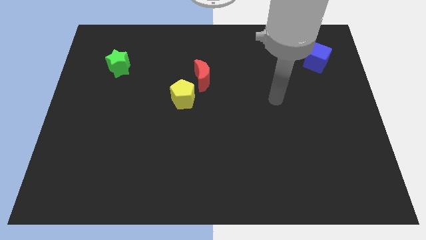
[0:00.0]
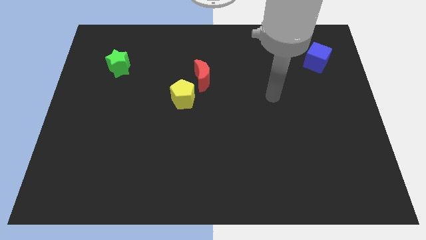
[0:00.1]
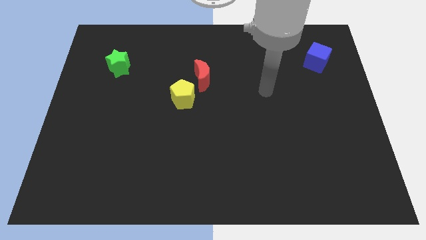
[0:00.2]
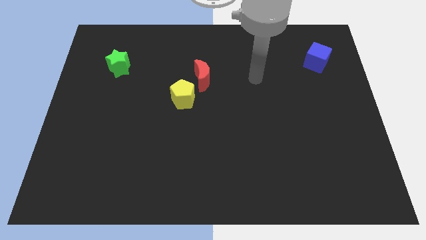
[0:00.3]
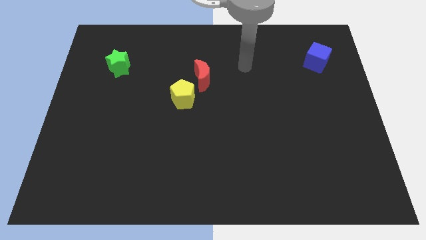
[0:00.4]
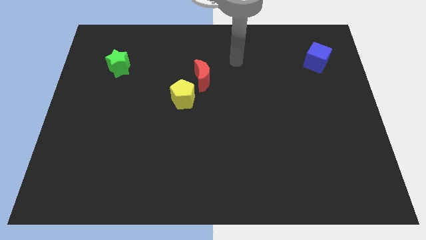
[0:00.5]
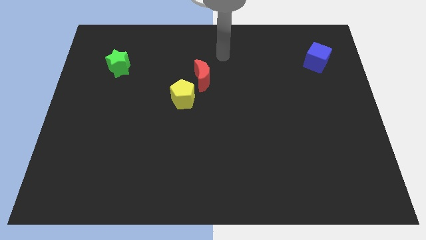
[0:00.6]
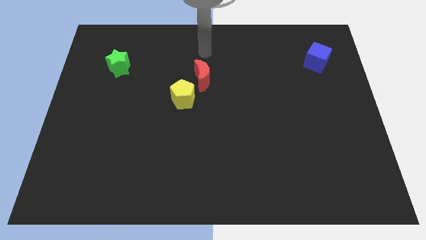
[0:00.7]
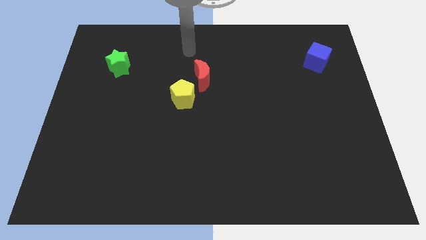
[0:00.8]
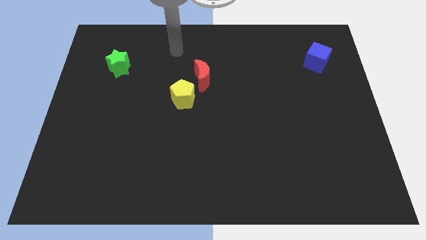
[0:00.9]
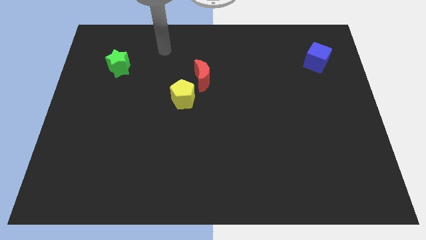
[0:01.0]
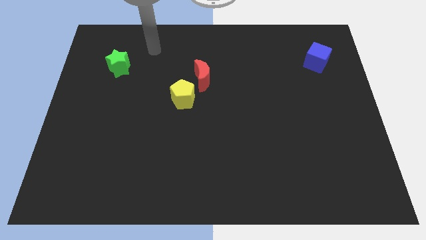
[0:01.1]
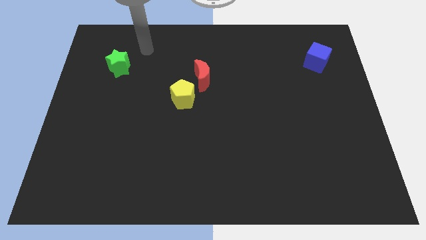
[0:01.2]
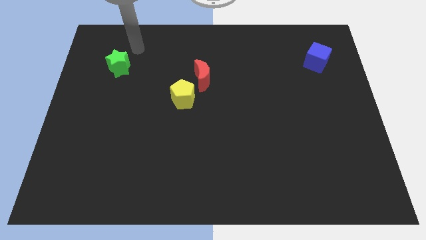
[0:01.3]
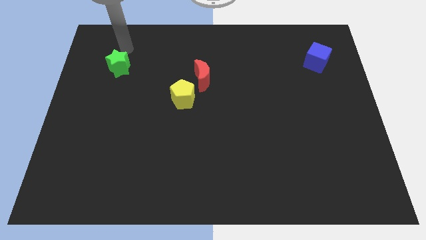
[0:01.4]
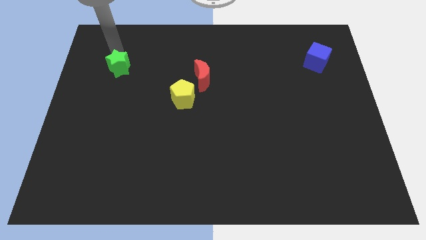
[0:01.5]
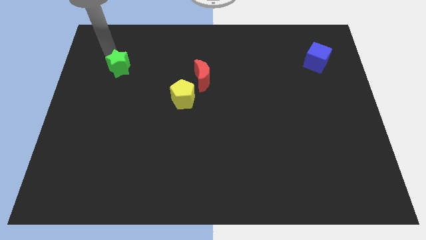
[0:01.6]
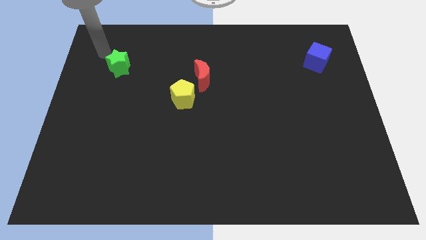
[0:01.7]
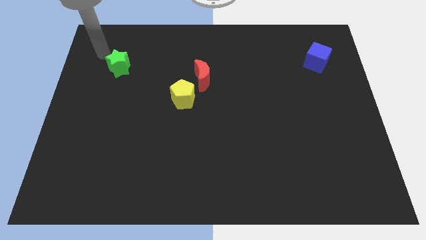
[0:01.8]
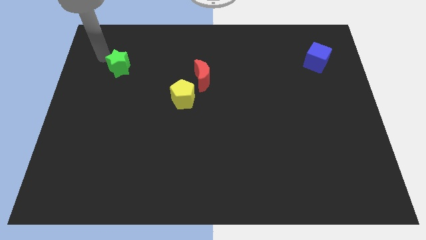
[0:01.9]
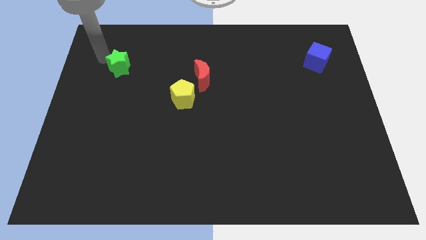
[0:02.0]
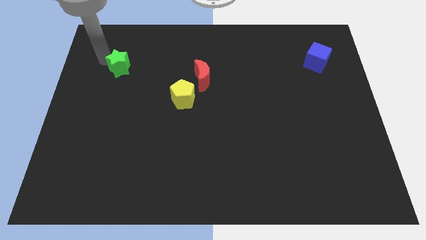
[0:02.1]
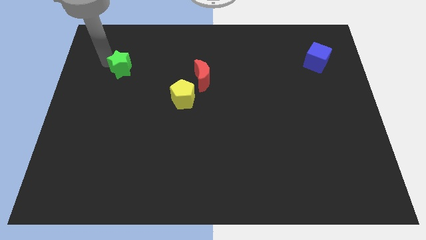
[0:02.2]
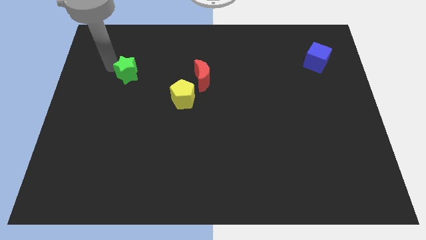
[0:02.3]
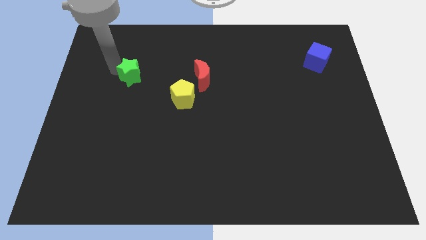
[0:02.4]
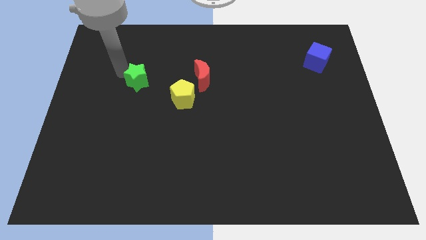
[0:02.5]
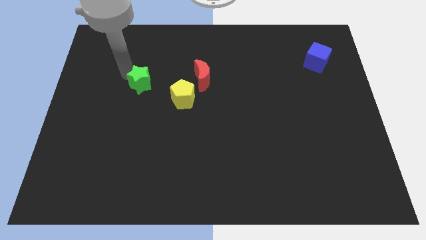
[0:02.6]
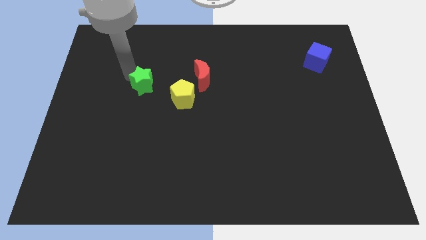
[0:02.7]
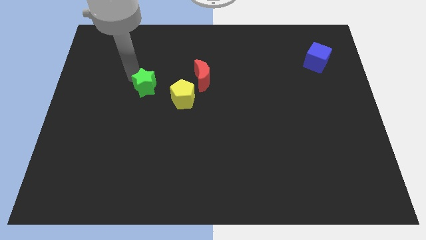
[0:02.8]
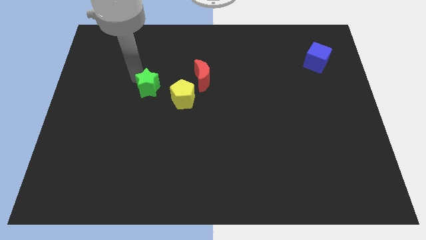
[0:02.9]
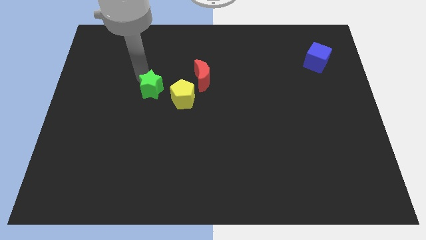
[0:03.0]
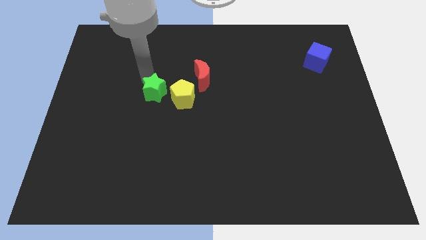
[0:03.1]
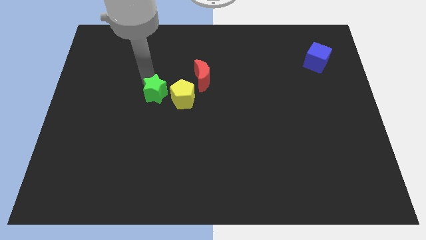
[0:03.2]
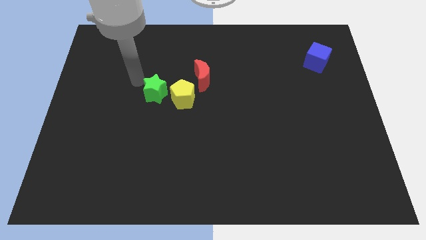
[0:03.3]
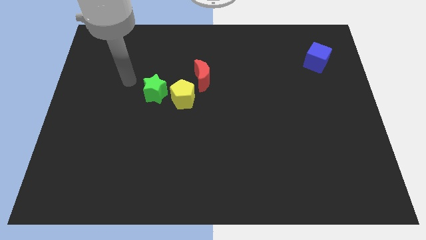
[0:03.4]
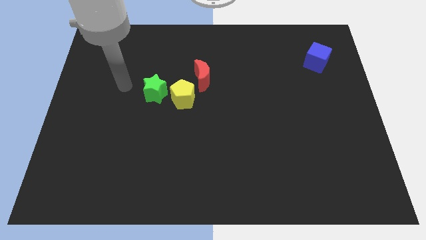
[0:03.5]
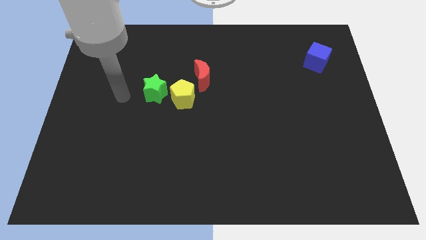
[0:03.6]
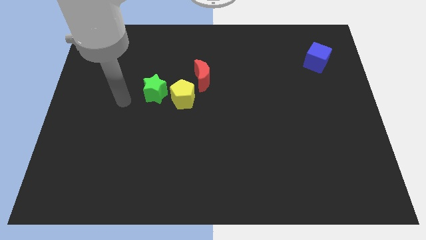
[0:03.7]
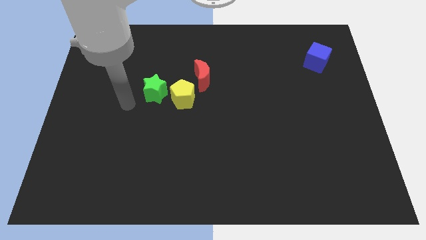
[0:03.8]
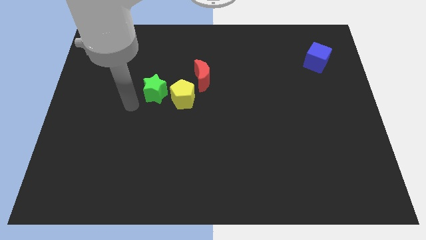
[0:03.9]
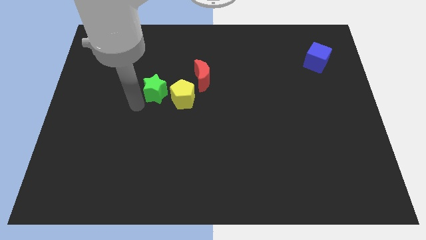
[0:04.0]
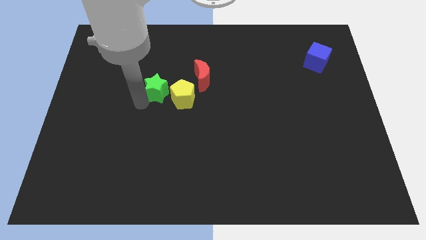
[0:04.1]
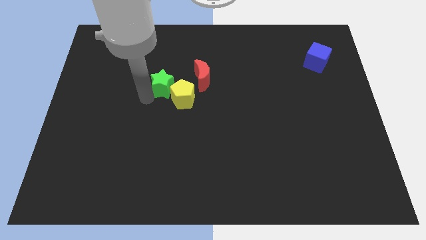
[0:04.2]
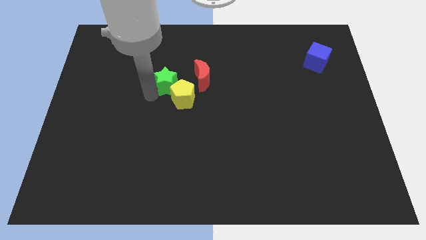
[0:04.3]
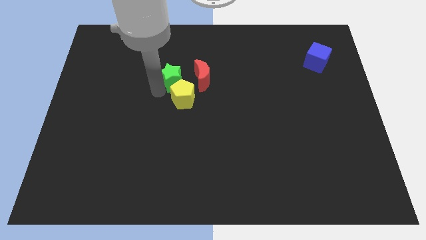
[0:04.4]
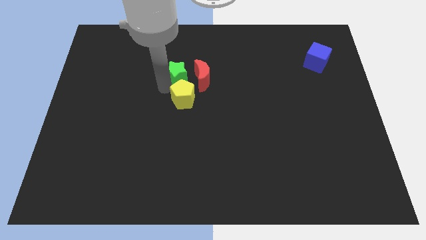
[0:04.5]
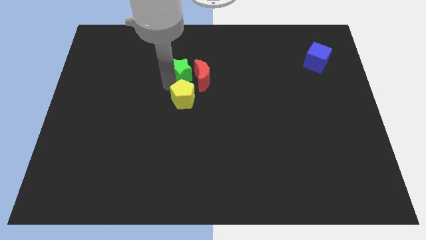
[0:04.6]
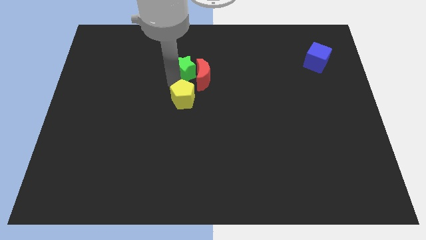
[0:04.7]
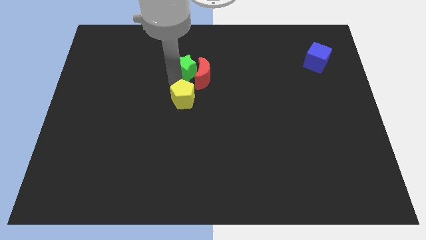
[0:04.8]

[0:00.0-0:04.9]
move the green star next to the moon

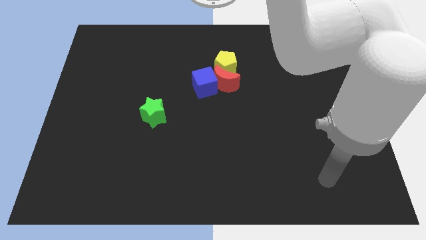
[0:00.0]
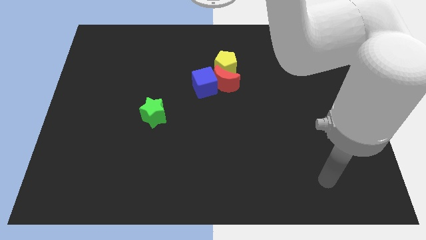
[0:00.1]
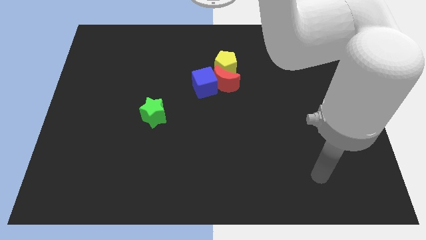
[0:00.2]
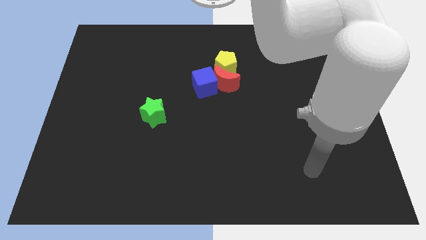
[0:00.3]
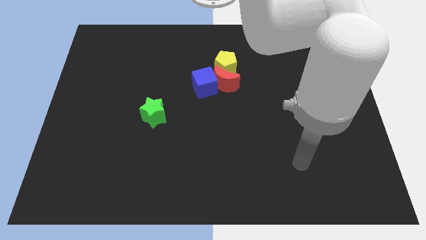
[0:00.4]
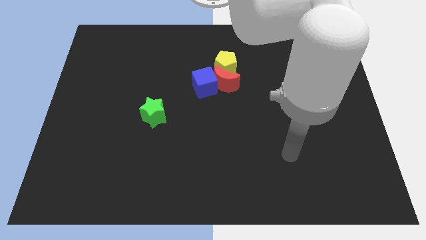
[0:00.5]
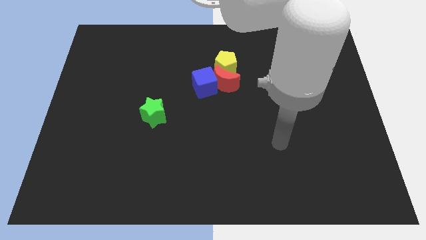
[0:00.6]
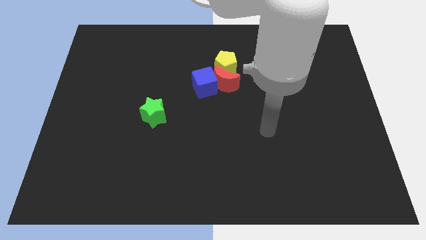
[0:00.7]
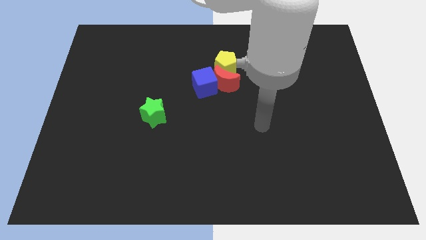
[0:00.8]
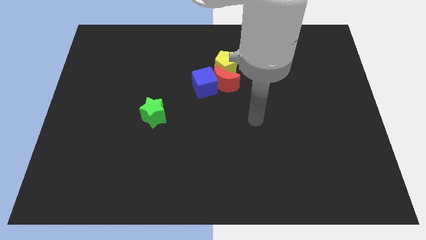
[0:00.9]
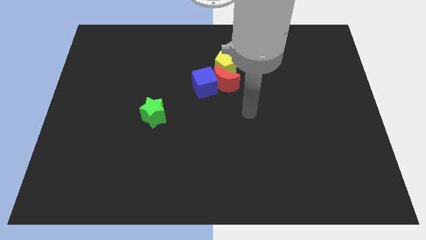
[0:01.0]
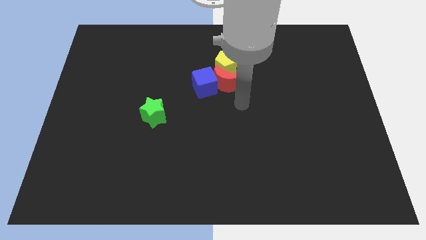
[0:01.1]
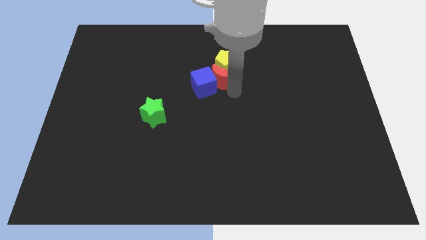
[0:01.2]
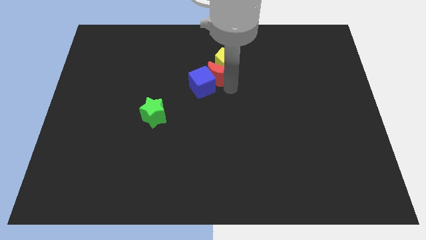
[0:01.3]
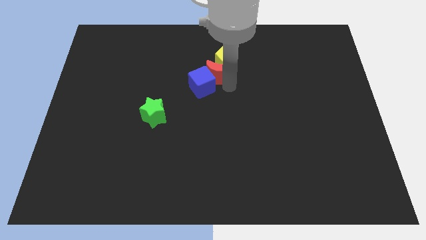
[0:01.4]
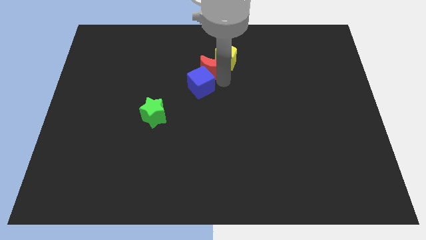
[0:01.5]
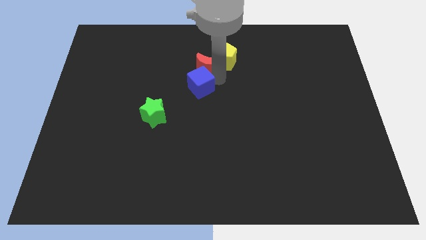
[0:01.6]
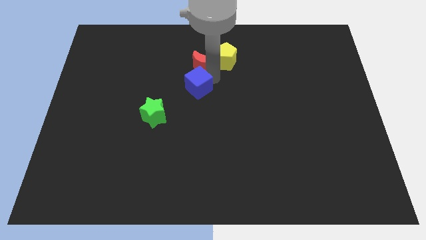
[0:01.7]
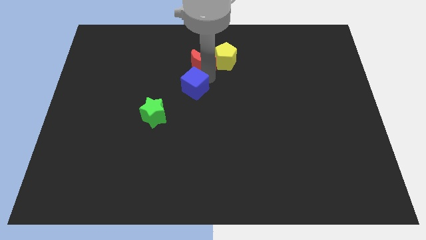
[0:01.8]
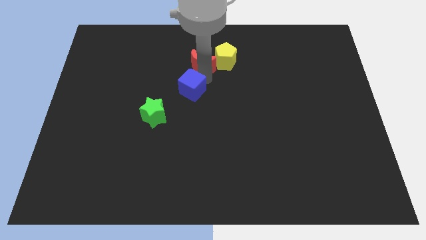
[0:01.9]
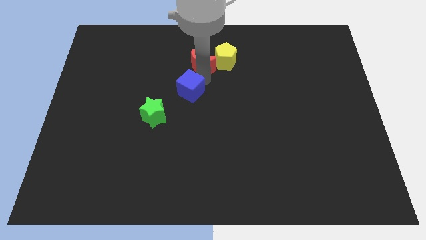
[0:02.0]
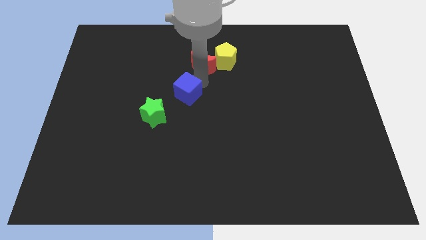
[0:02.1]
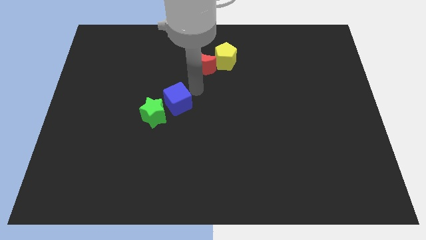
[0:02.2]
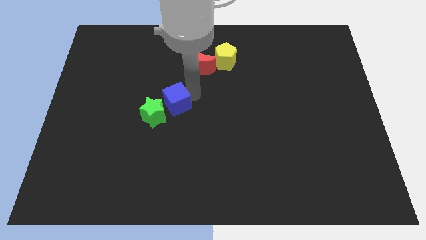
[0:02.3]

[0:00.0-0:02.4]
move the cube next to the green star

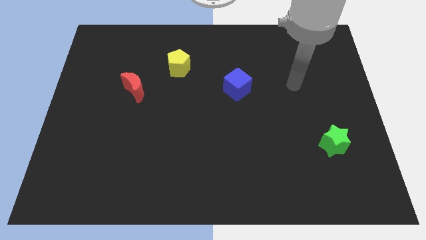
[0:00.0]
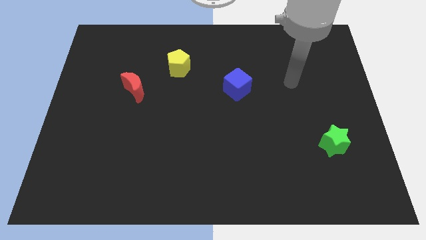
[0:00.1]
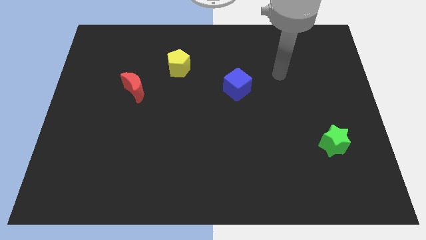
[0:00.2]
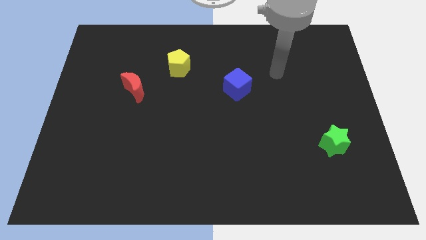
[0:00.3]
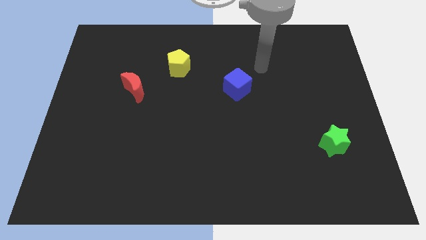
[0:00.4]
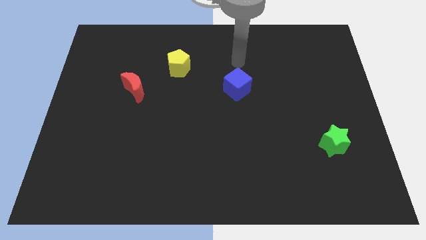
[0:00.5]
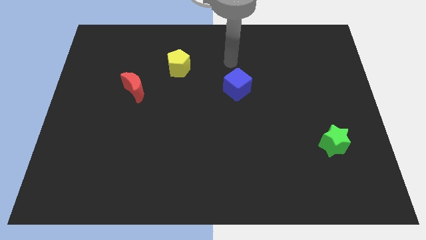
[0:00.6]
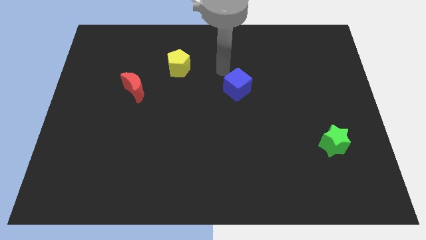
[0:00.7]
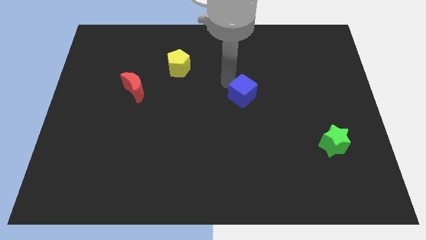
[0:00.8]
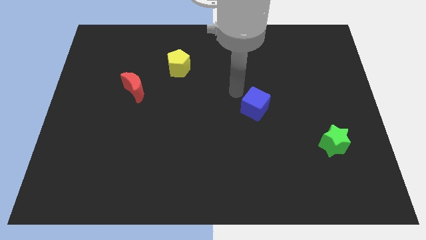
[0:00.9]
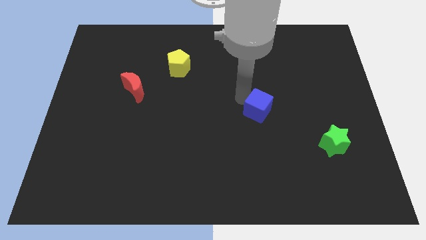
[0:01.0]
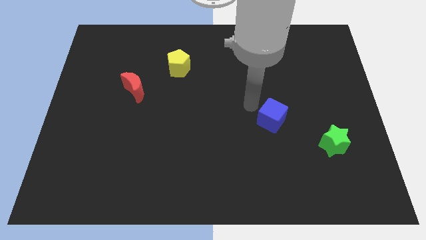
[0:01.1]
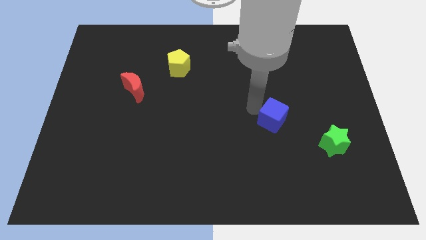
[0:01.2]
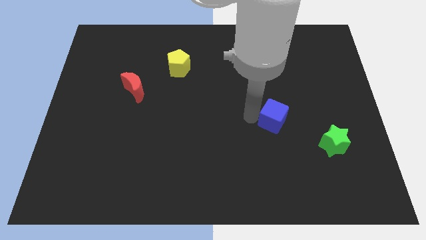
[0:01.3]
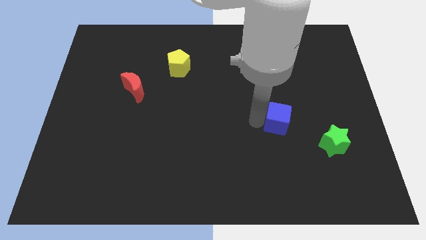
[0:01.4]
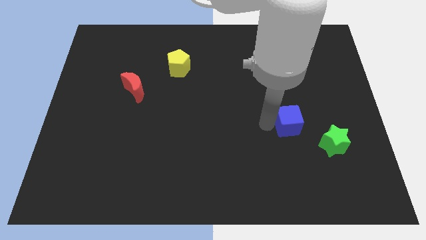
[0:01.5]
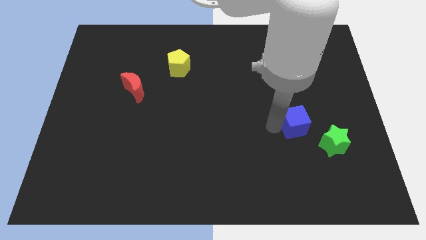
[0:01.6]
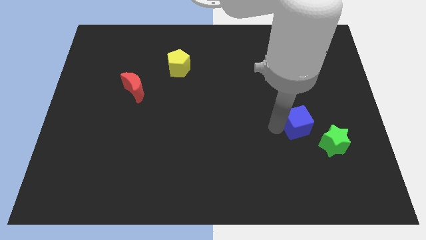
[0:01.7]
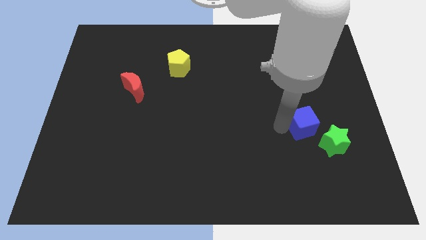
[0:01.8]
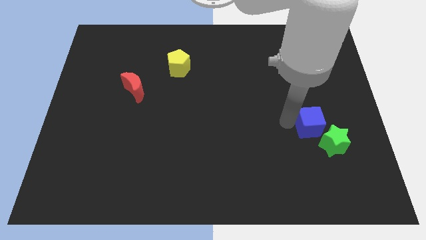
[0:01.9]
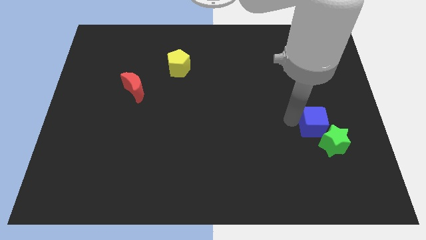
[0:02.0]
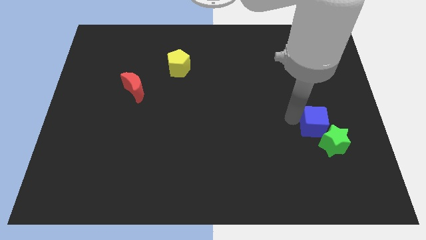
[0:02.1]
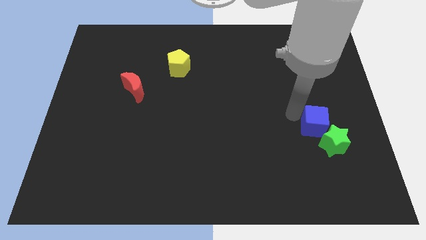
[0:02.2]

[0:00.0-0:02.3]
move the blue block close to the green star
